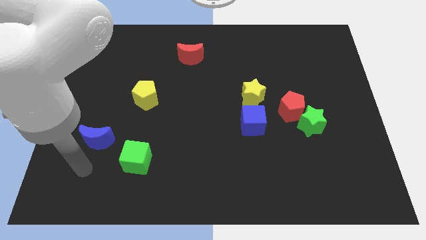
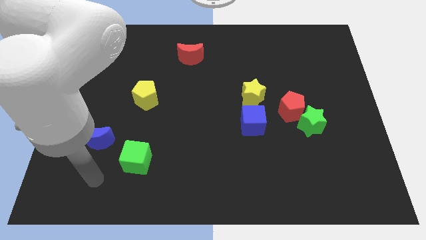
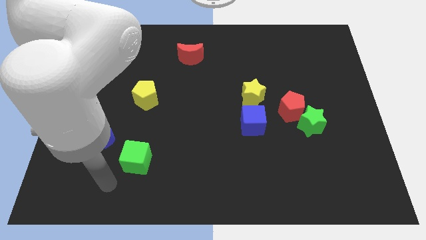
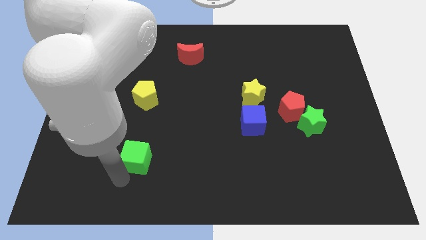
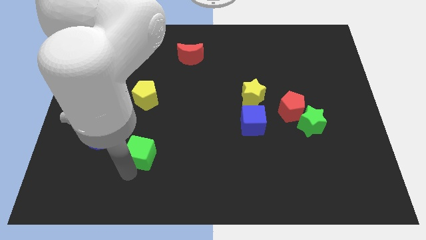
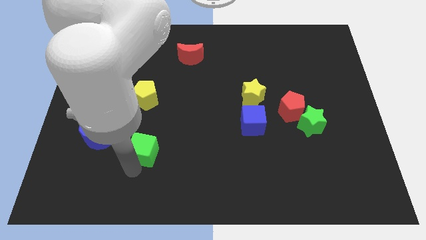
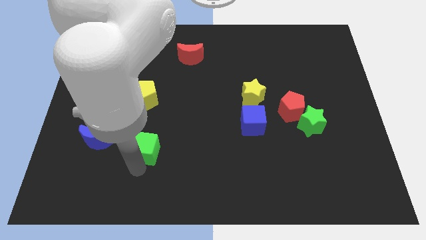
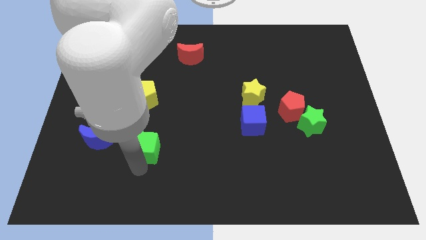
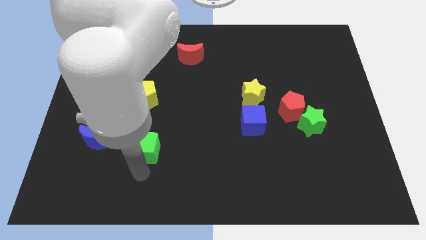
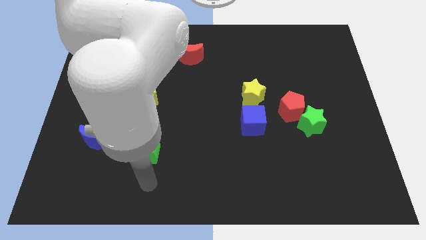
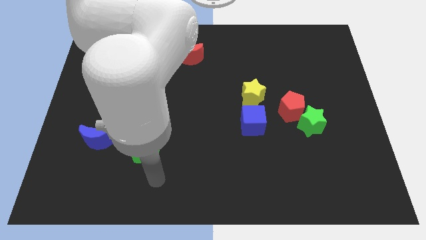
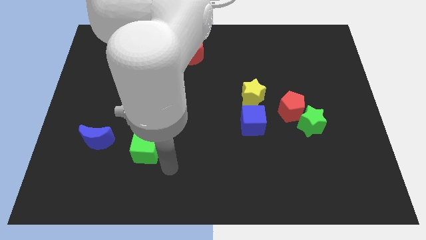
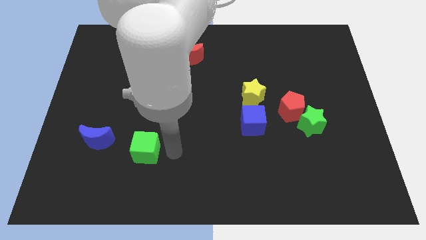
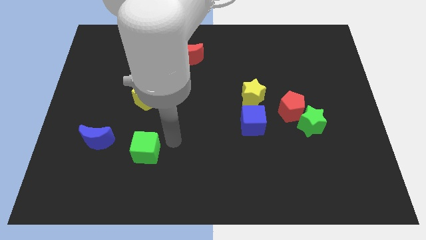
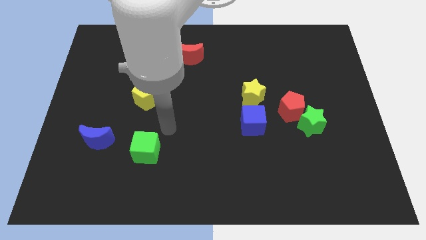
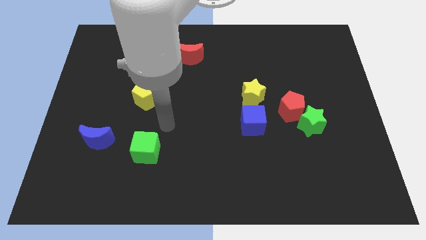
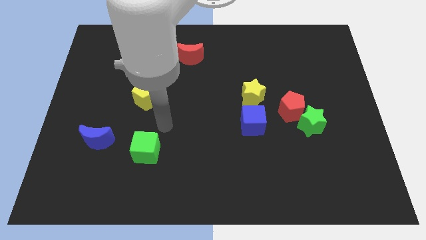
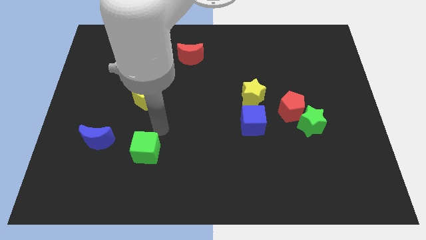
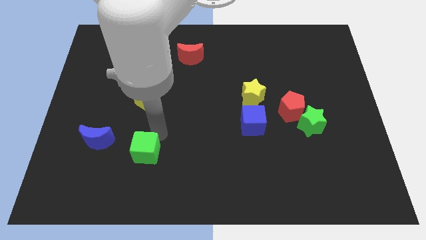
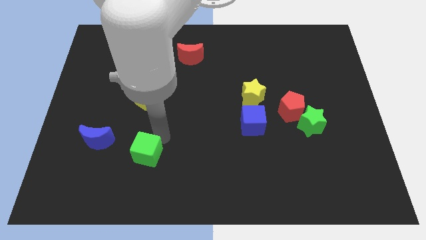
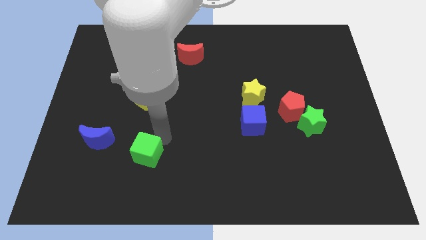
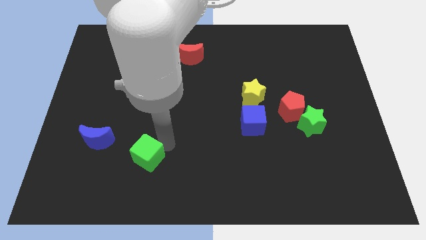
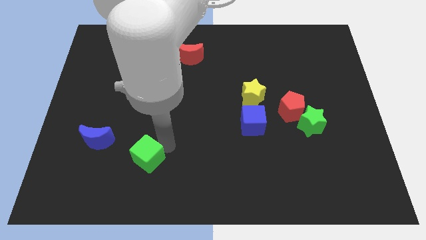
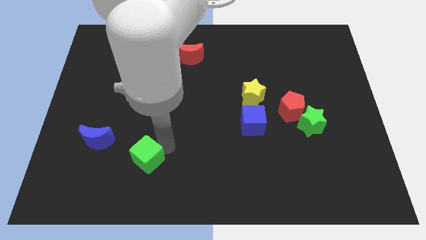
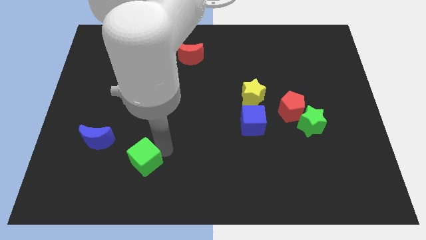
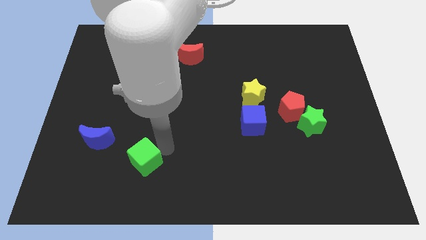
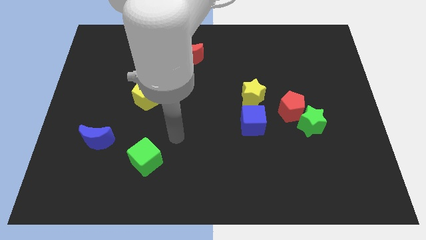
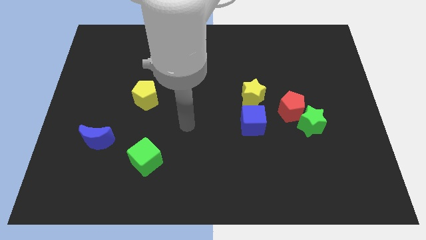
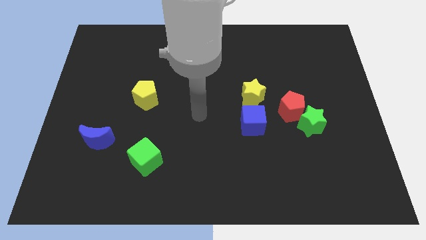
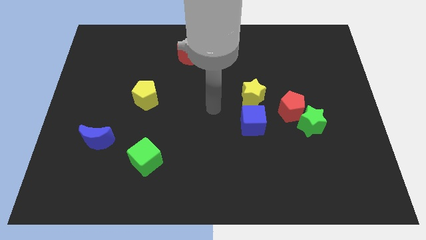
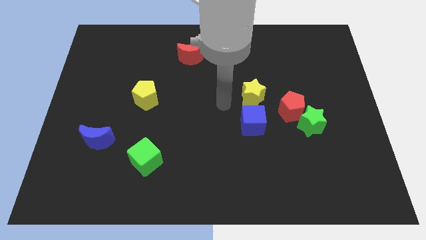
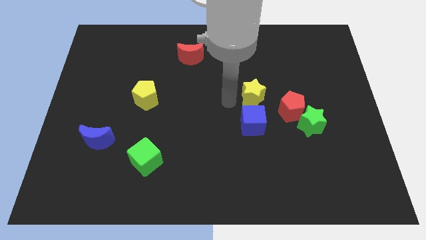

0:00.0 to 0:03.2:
place the green cube to the right of the blue crescent

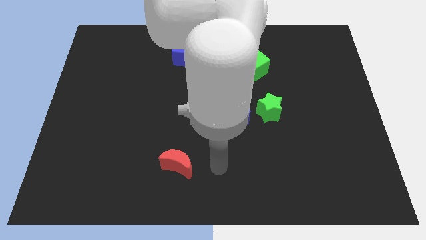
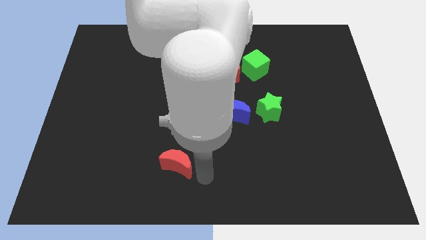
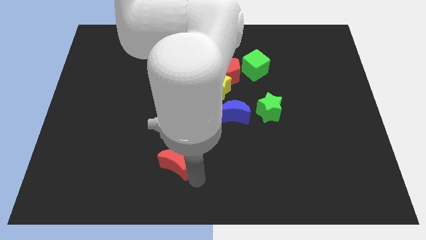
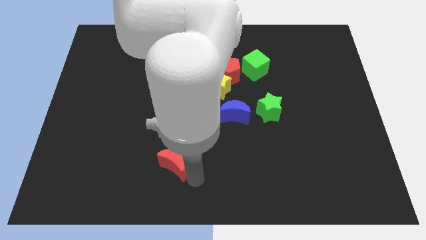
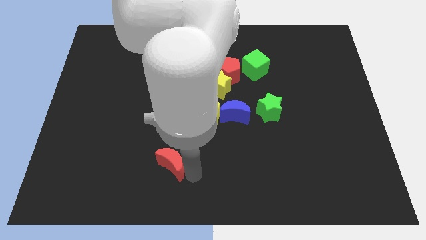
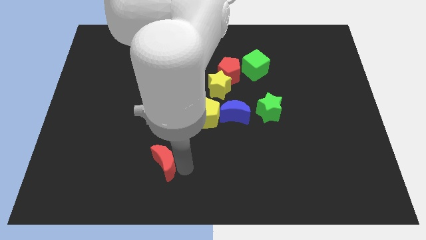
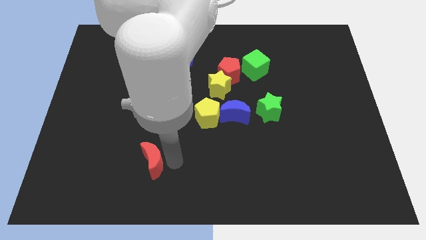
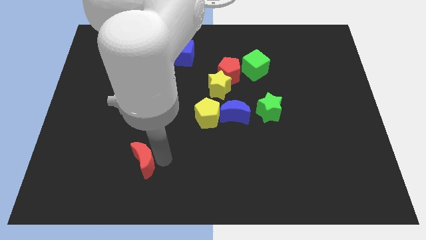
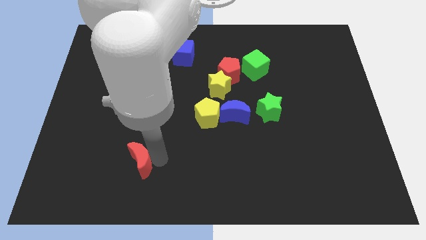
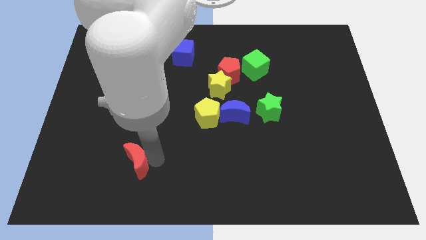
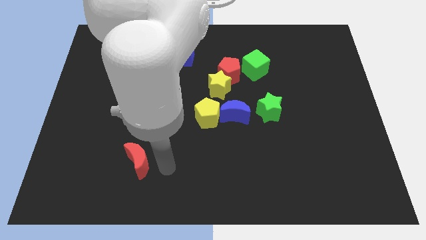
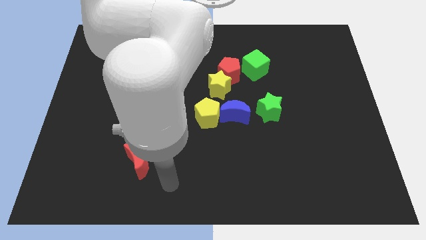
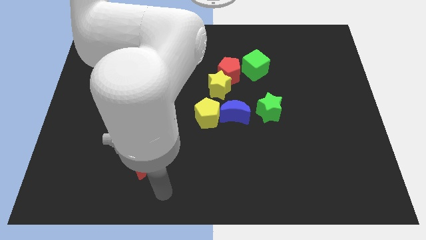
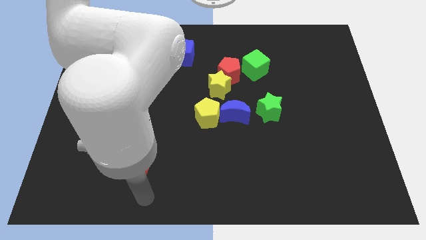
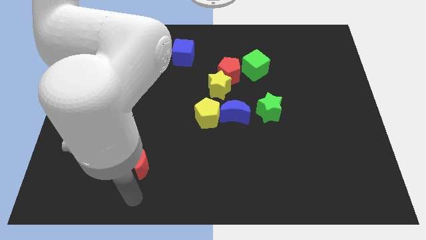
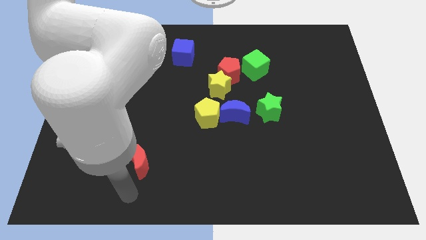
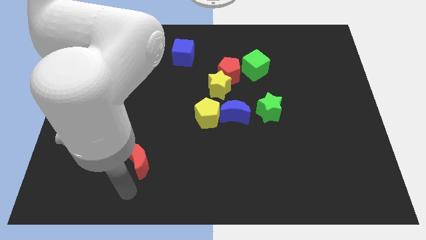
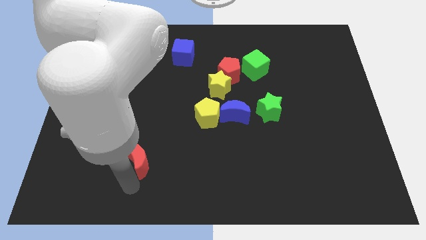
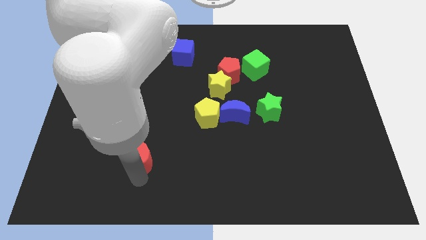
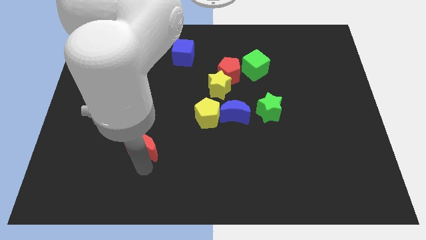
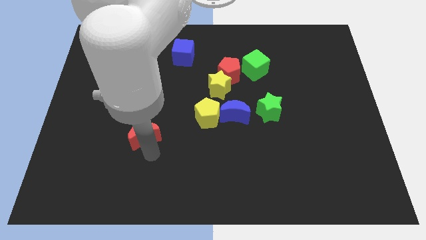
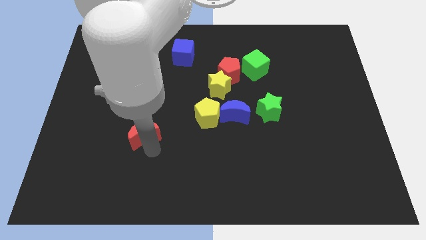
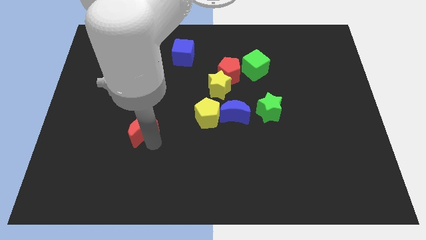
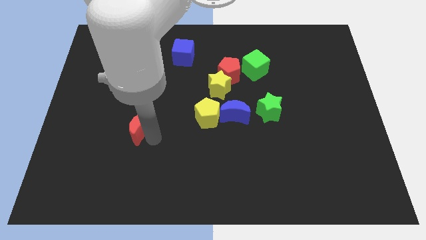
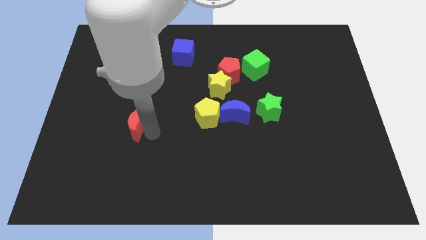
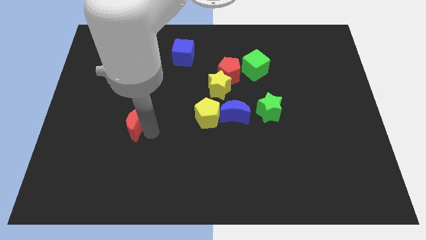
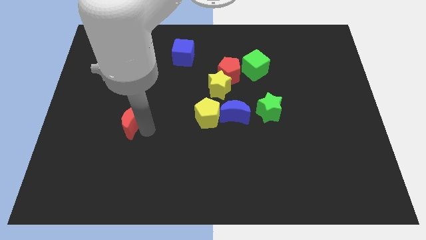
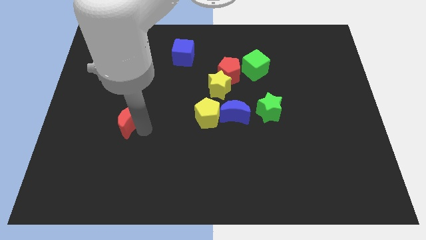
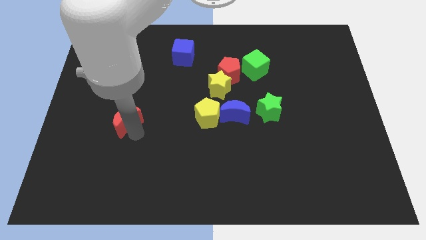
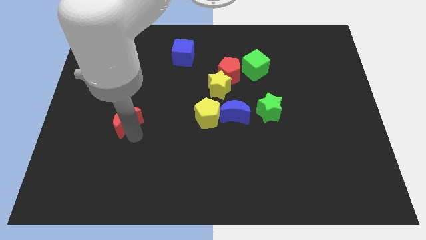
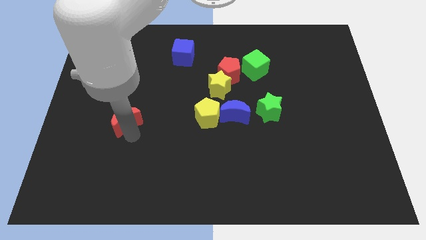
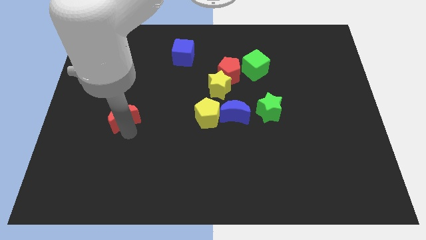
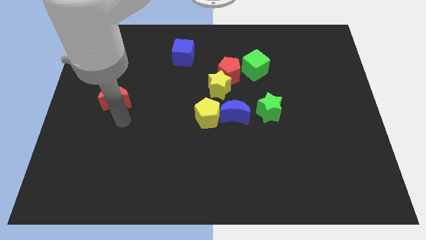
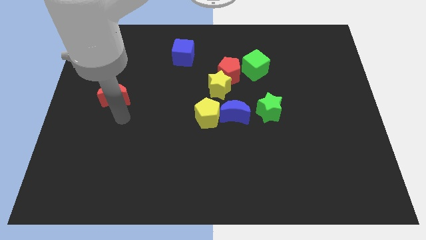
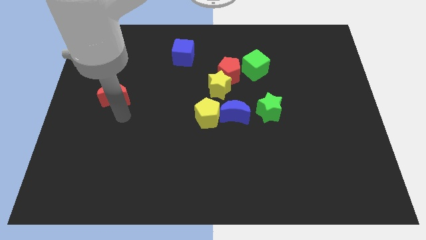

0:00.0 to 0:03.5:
push the red crescent to the top side

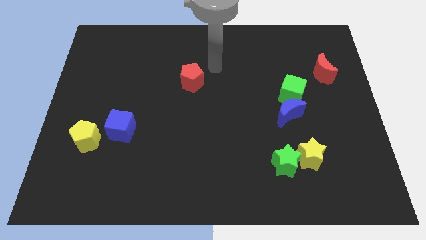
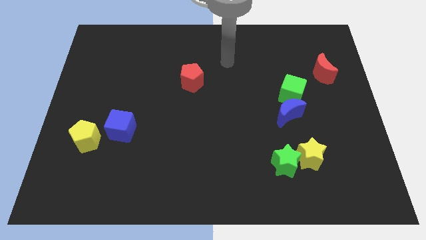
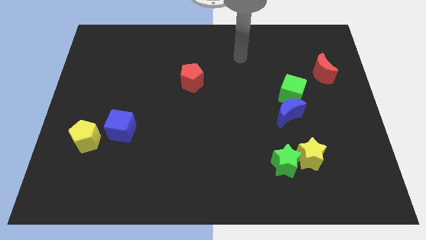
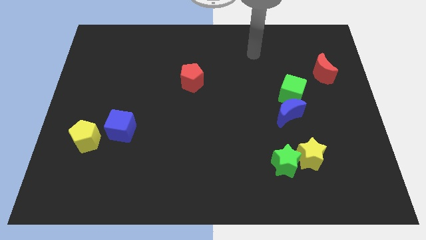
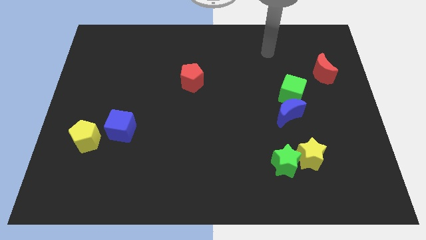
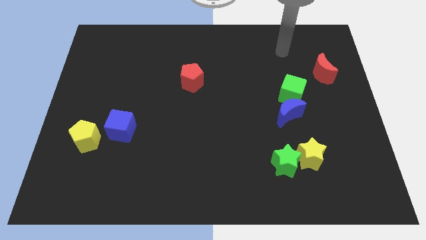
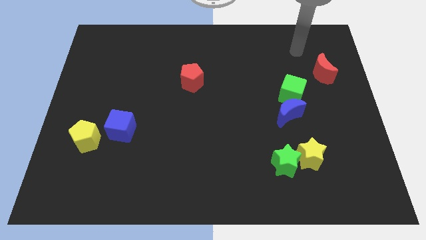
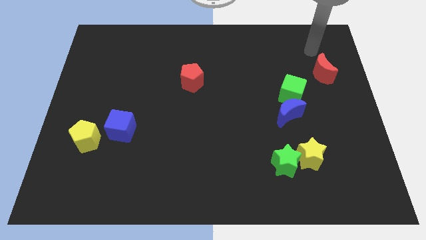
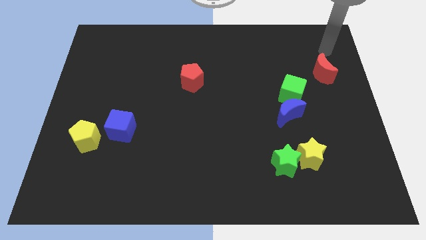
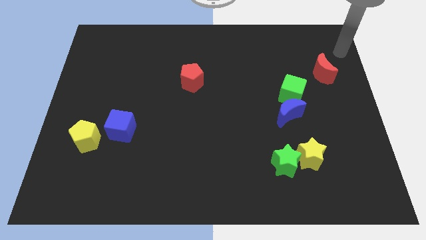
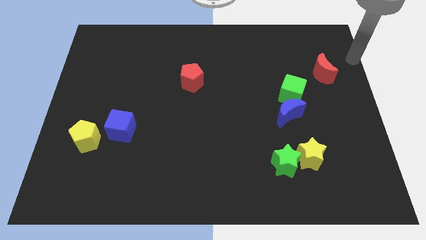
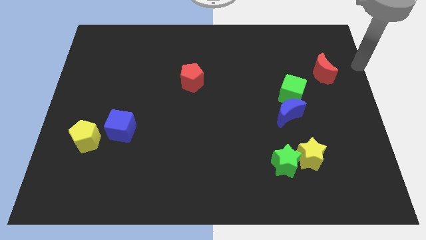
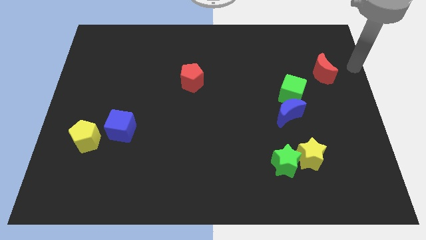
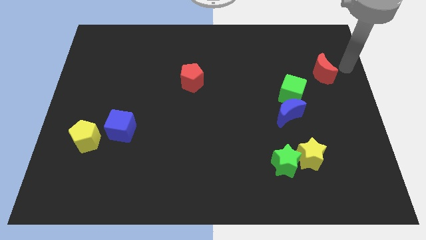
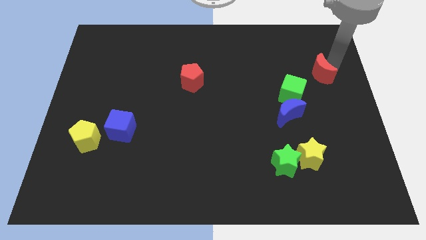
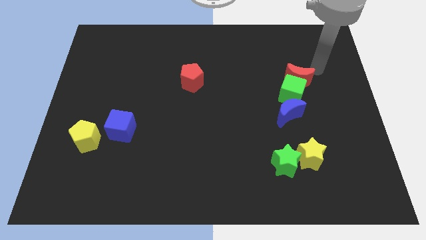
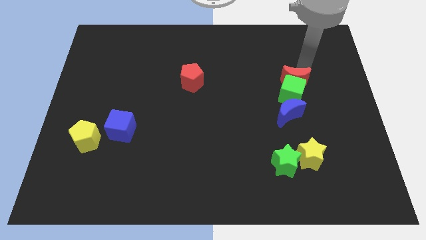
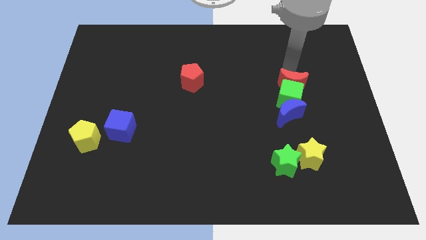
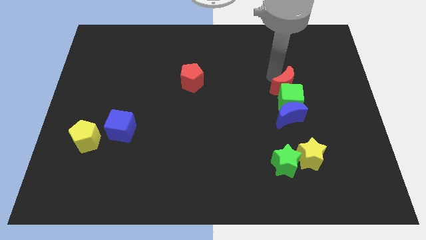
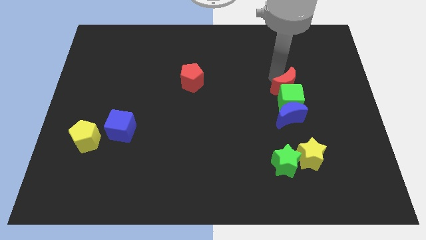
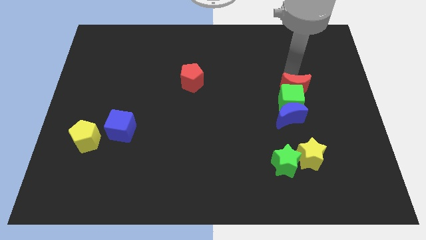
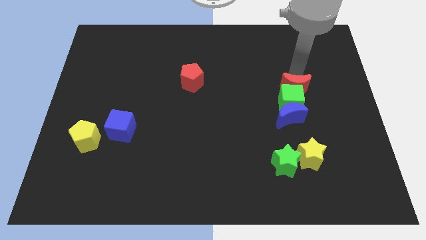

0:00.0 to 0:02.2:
push the red crescent into the green cube
